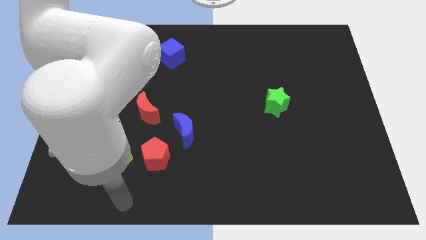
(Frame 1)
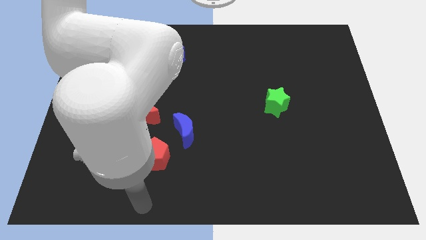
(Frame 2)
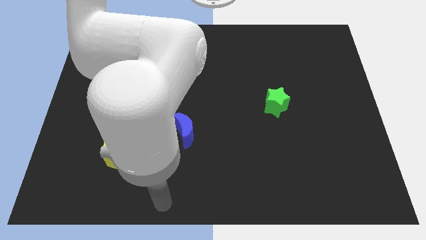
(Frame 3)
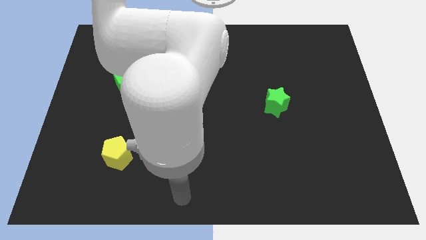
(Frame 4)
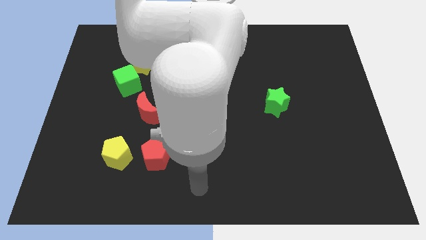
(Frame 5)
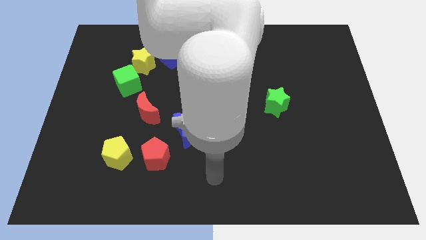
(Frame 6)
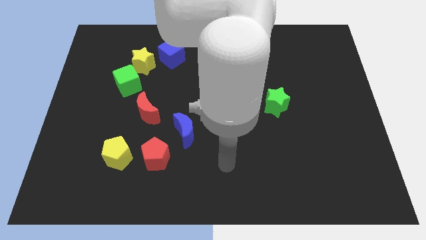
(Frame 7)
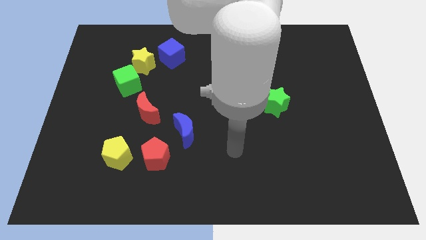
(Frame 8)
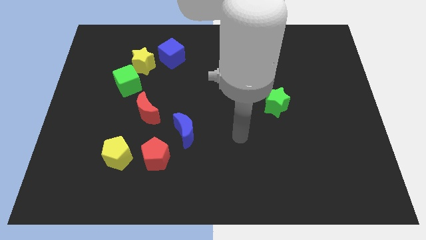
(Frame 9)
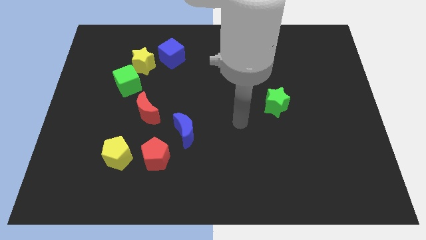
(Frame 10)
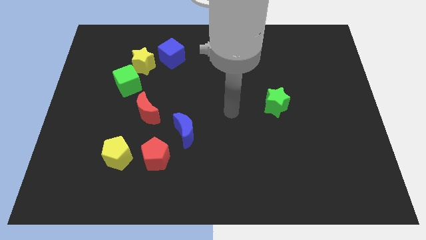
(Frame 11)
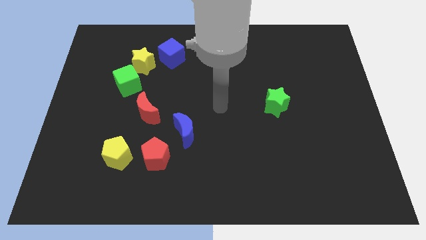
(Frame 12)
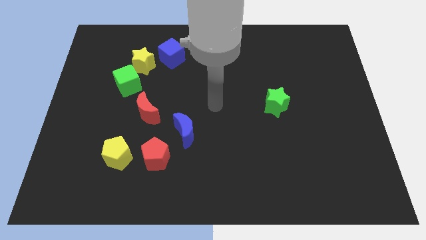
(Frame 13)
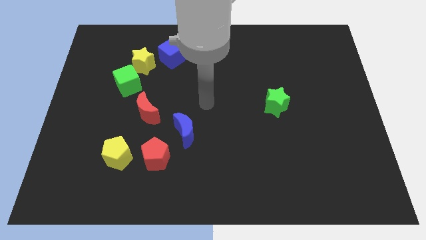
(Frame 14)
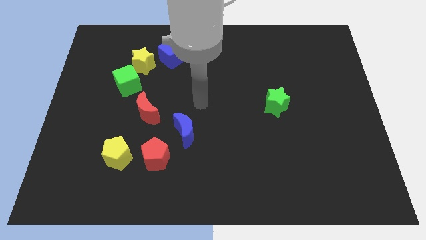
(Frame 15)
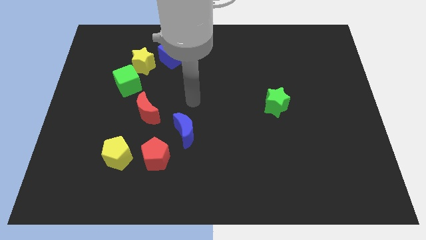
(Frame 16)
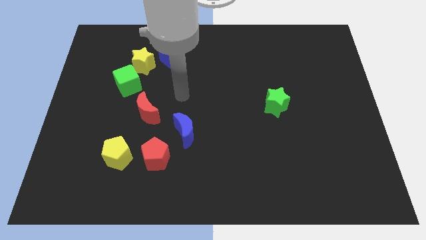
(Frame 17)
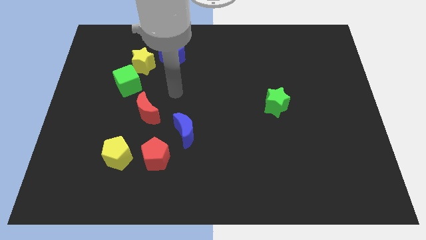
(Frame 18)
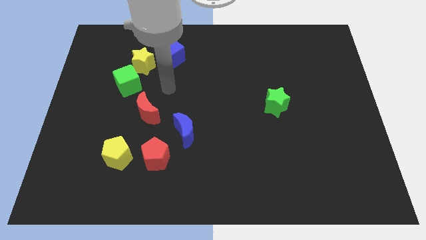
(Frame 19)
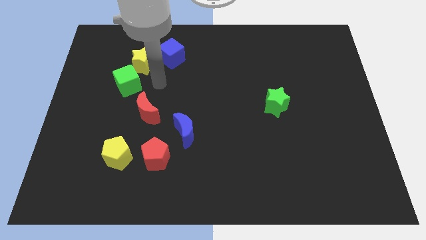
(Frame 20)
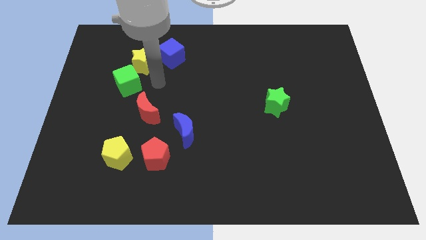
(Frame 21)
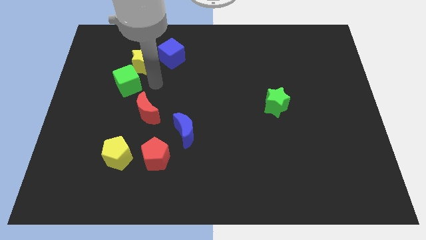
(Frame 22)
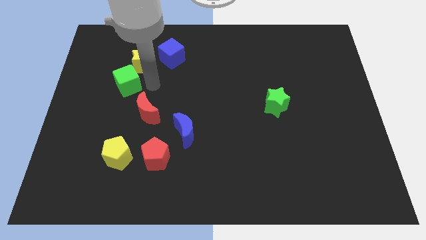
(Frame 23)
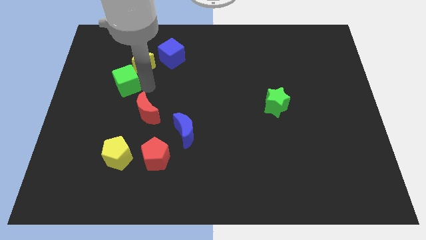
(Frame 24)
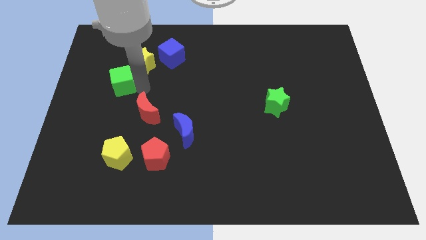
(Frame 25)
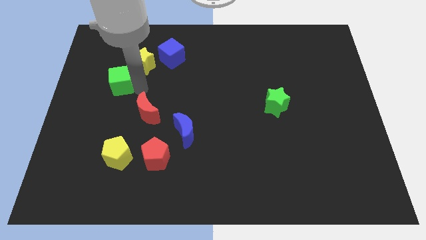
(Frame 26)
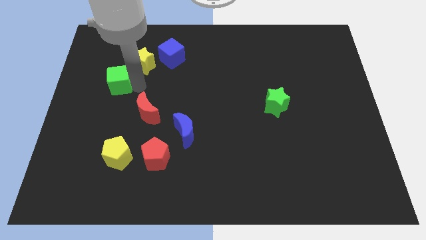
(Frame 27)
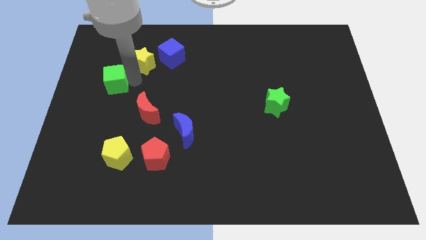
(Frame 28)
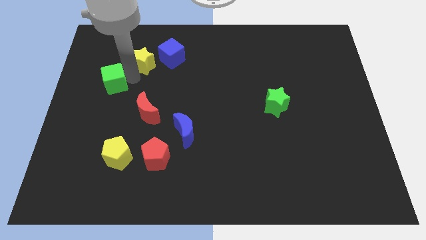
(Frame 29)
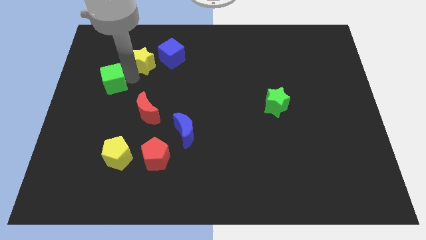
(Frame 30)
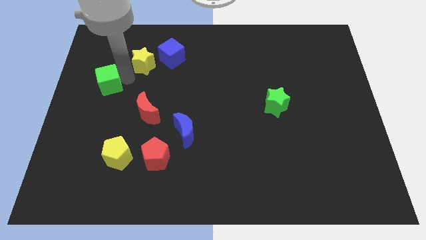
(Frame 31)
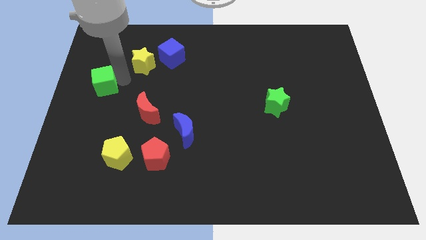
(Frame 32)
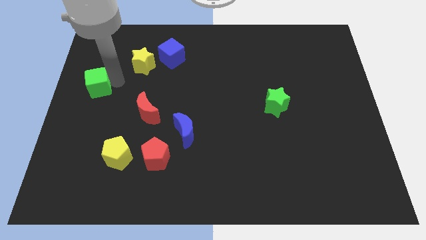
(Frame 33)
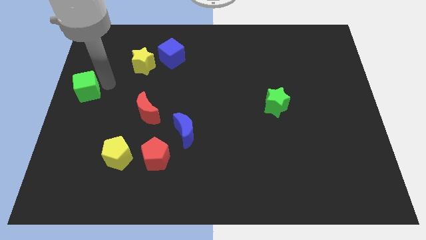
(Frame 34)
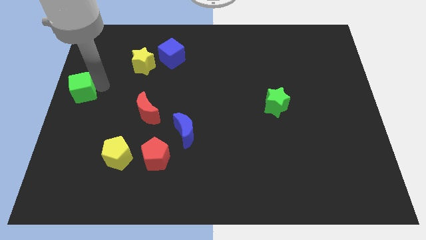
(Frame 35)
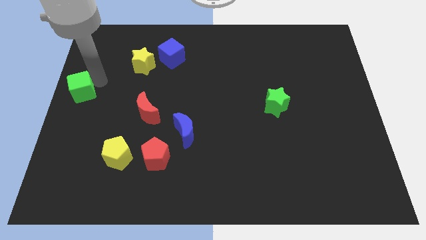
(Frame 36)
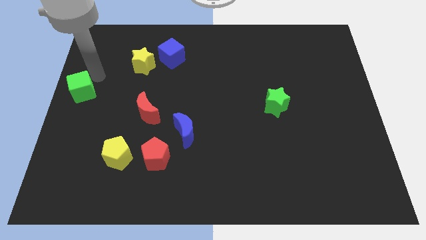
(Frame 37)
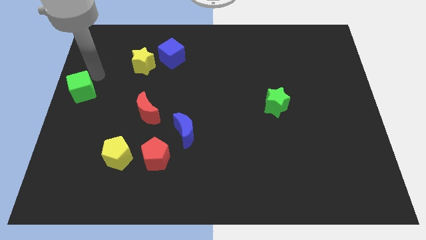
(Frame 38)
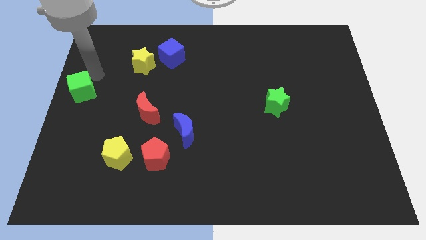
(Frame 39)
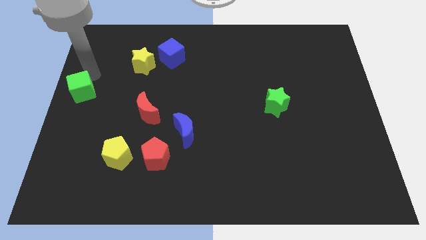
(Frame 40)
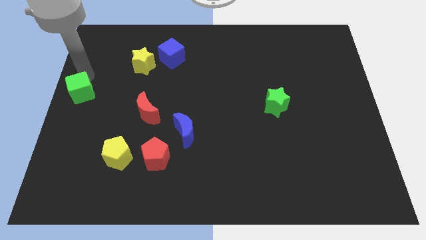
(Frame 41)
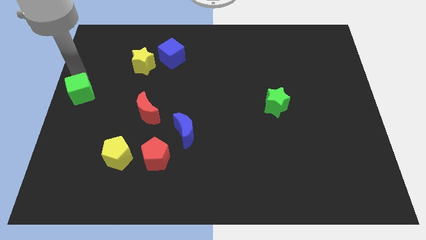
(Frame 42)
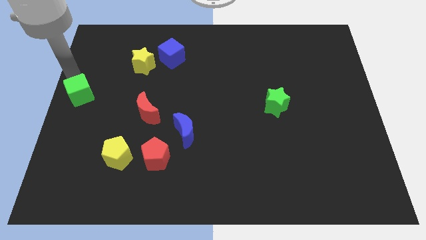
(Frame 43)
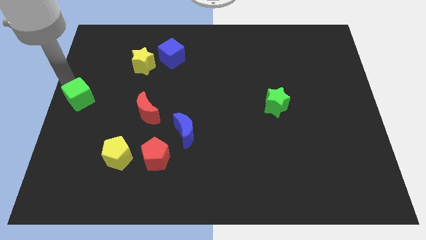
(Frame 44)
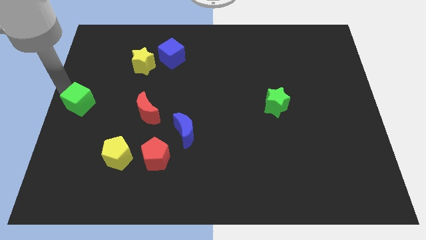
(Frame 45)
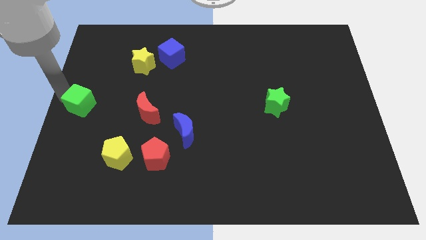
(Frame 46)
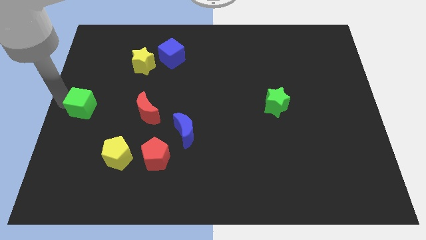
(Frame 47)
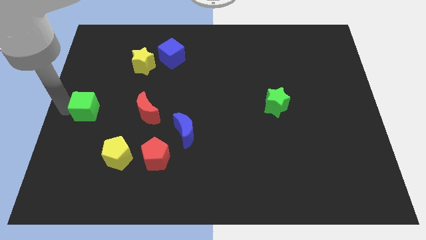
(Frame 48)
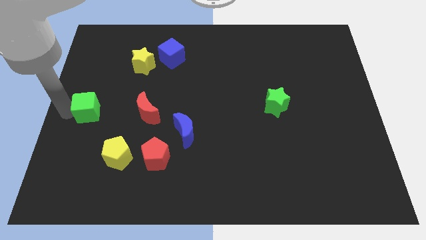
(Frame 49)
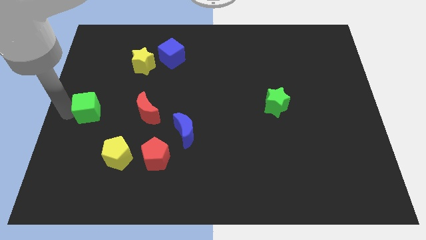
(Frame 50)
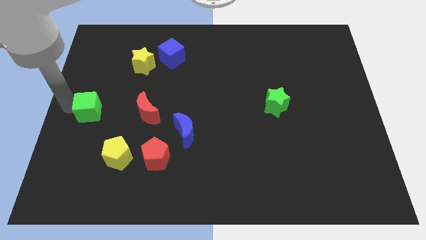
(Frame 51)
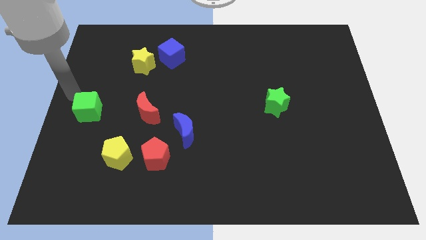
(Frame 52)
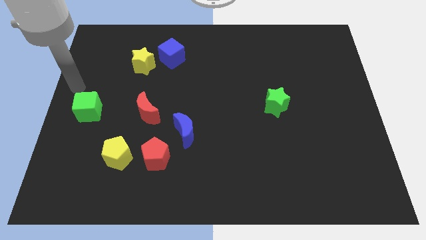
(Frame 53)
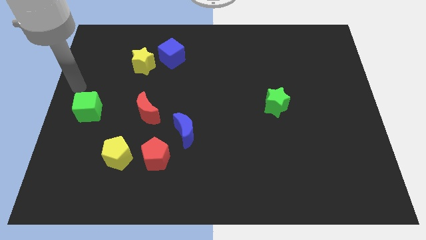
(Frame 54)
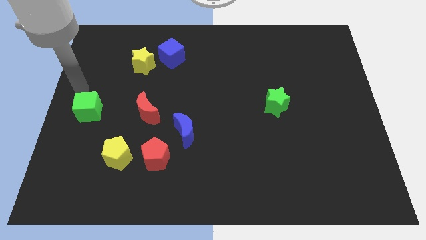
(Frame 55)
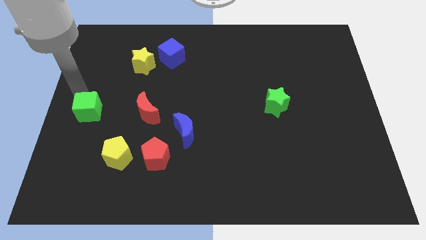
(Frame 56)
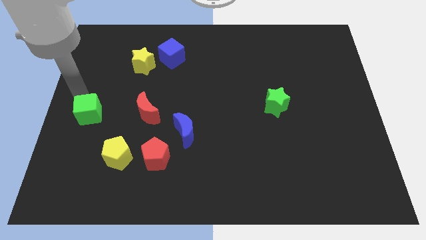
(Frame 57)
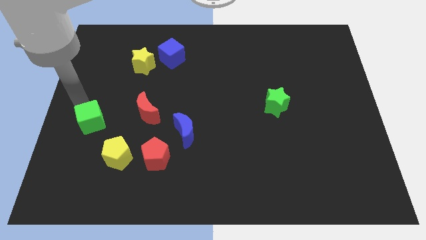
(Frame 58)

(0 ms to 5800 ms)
push the green cube to the left of the red crescent

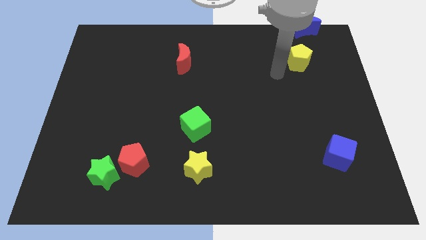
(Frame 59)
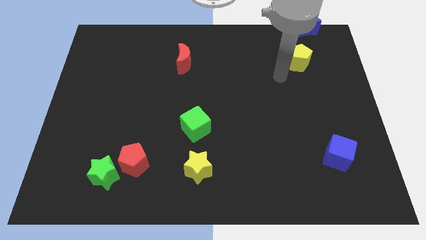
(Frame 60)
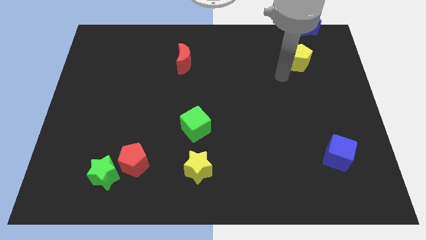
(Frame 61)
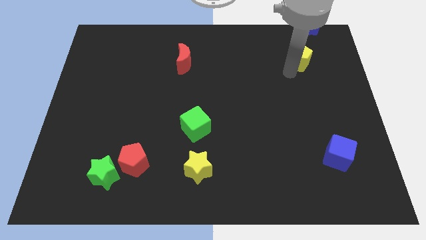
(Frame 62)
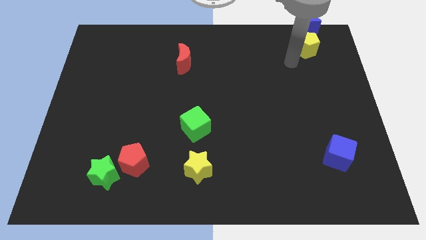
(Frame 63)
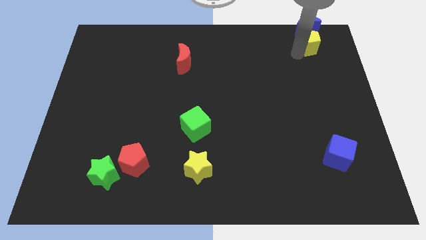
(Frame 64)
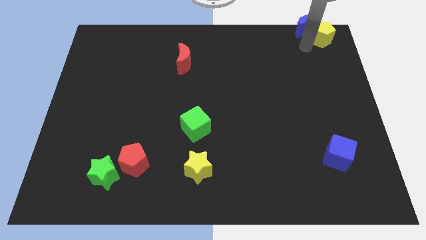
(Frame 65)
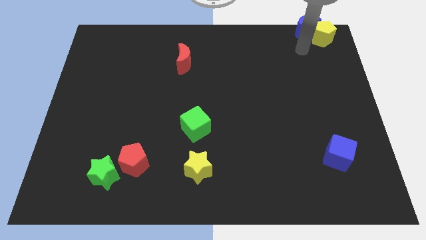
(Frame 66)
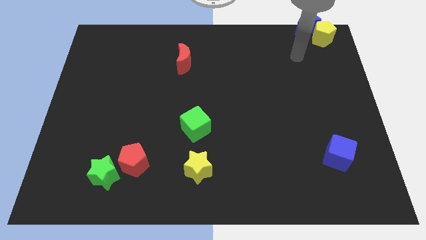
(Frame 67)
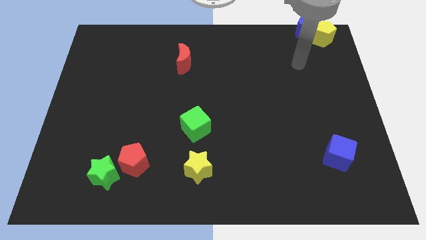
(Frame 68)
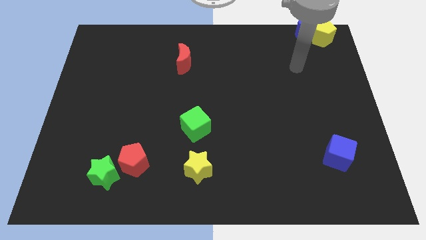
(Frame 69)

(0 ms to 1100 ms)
move yellow pentagon to the bottom right of the blue moon

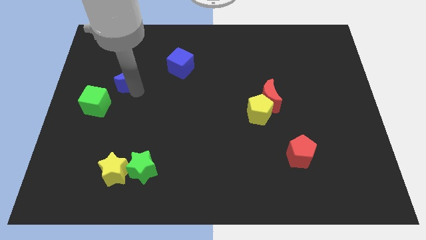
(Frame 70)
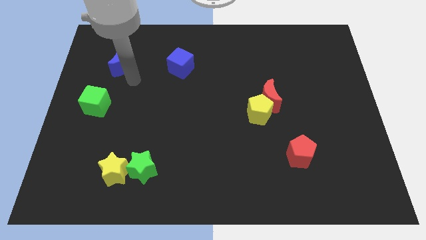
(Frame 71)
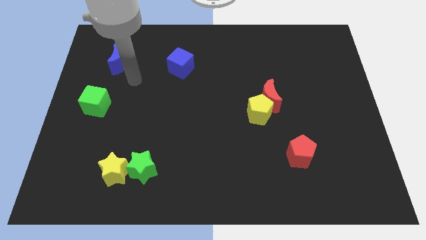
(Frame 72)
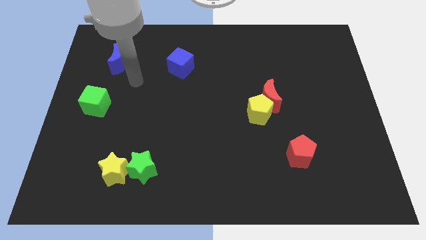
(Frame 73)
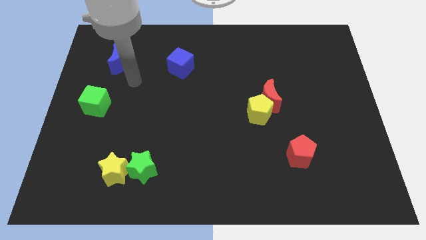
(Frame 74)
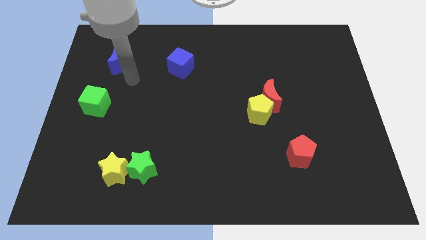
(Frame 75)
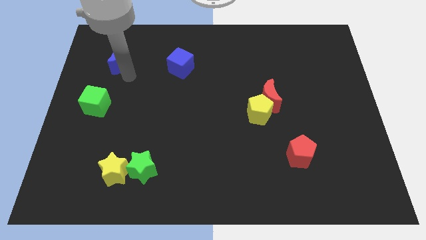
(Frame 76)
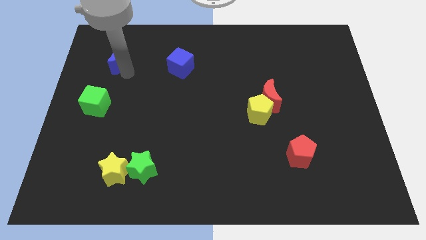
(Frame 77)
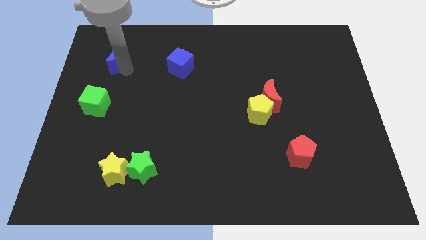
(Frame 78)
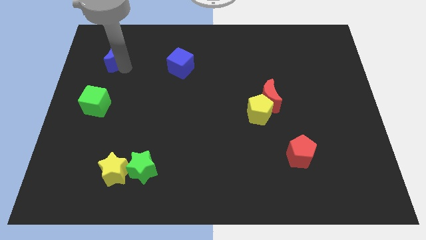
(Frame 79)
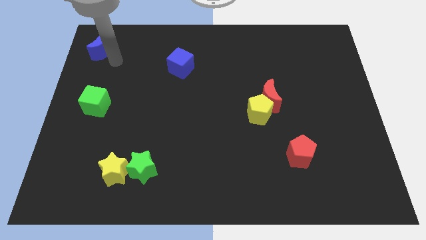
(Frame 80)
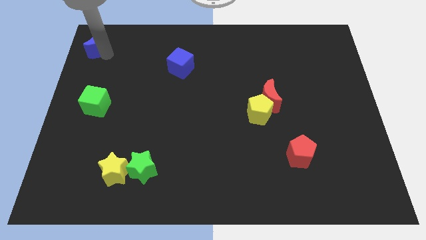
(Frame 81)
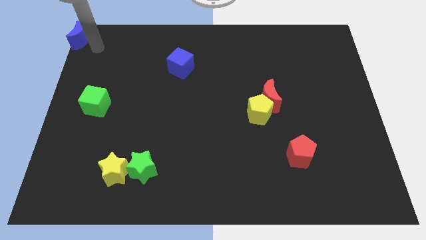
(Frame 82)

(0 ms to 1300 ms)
place the blue cube above the green cube

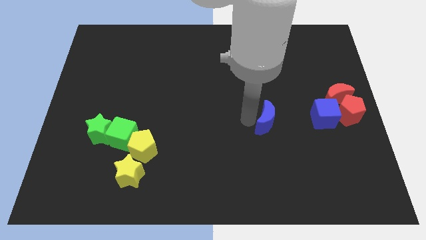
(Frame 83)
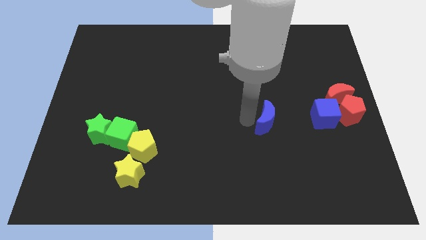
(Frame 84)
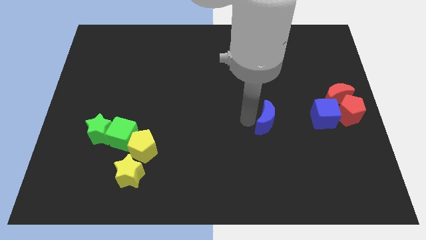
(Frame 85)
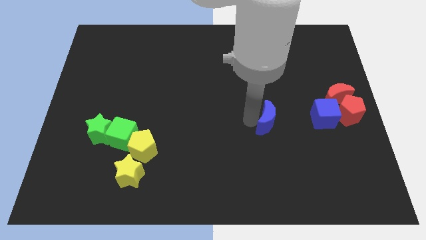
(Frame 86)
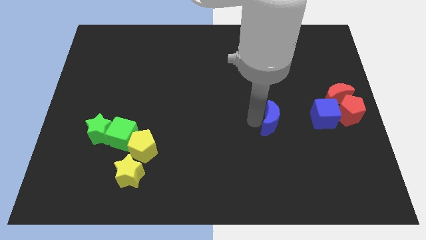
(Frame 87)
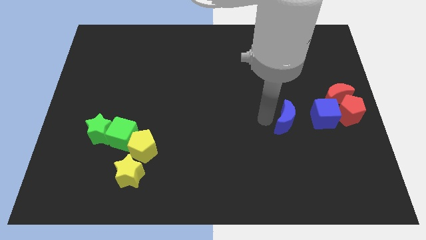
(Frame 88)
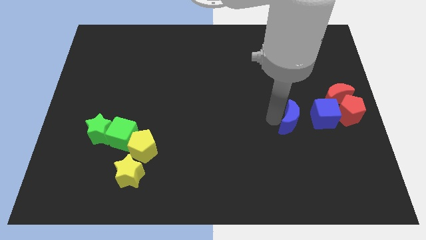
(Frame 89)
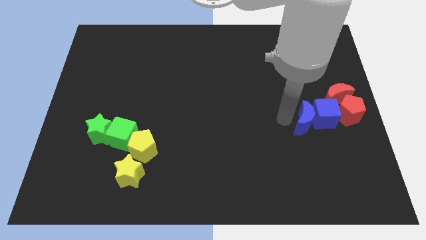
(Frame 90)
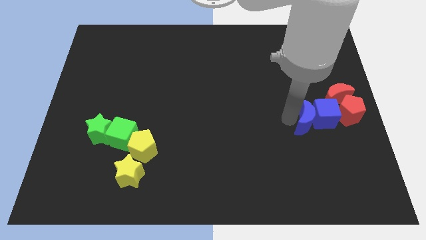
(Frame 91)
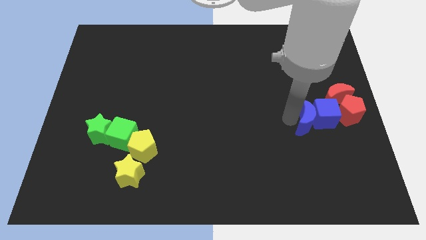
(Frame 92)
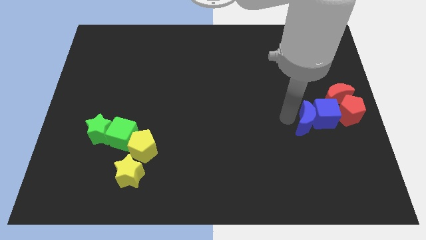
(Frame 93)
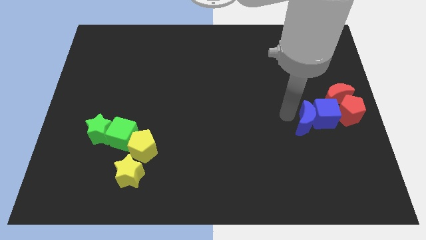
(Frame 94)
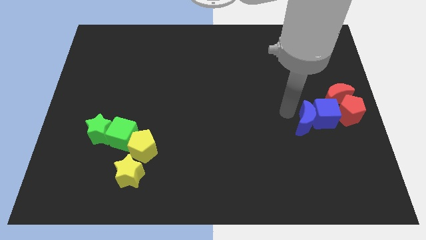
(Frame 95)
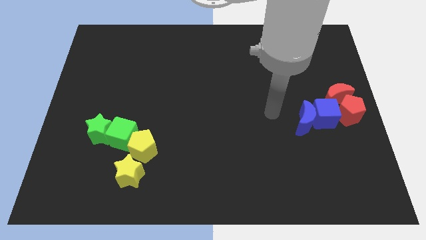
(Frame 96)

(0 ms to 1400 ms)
push the blue crescent to the left of the blue cube
